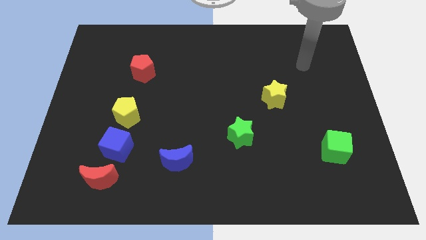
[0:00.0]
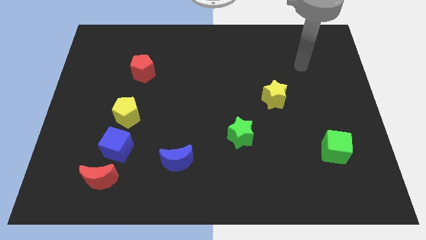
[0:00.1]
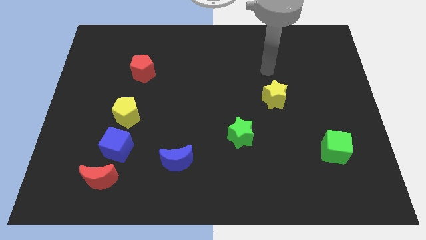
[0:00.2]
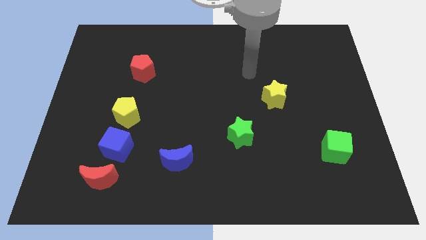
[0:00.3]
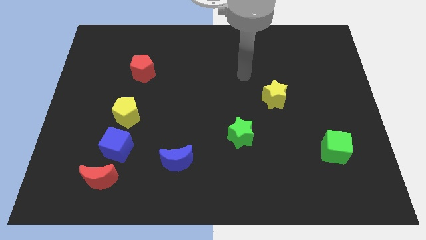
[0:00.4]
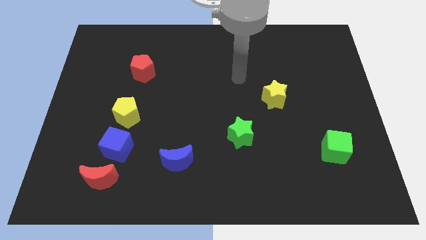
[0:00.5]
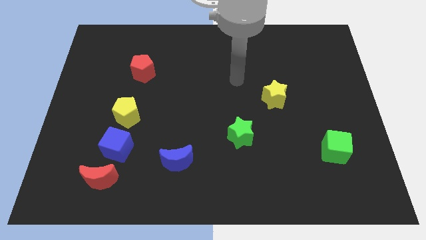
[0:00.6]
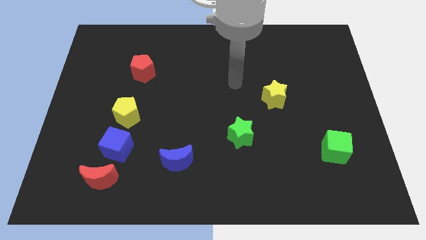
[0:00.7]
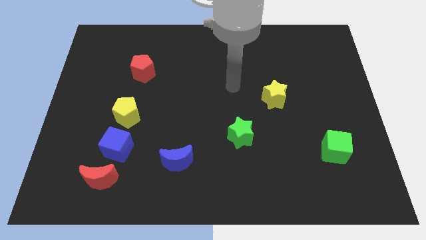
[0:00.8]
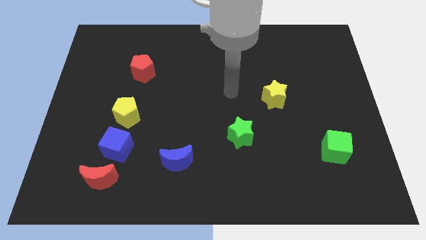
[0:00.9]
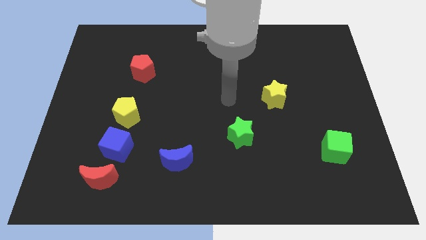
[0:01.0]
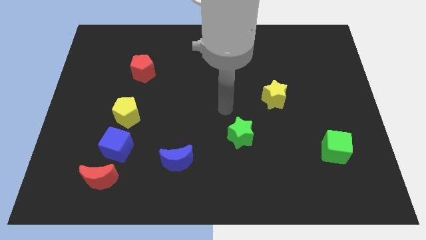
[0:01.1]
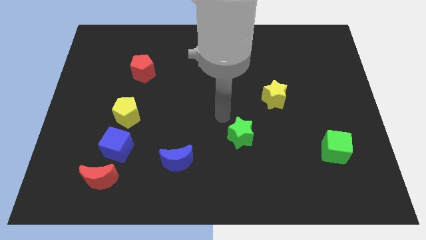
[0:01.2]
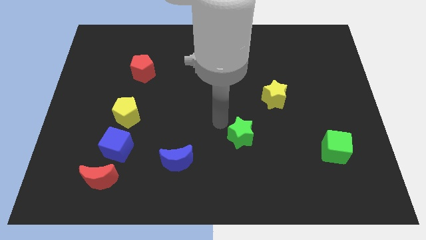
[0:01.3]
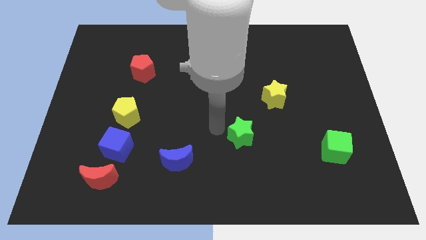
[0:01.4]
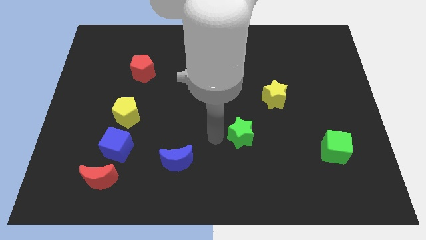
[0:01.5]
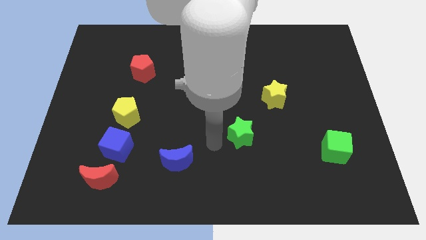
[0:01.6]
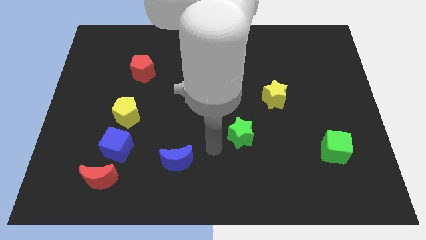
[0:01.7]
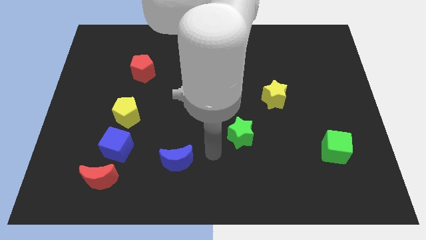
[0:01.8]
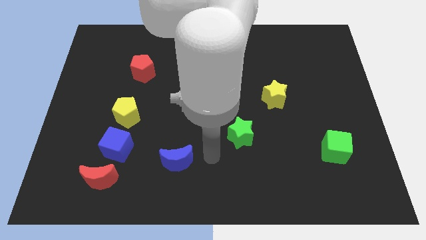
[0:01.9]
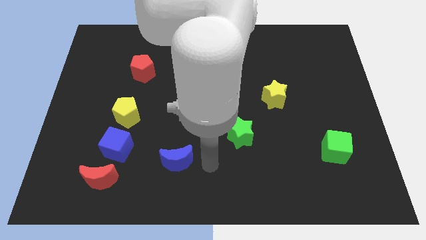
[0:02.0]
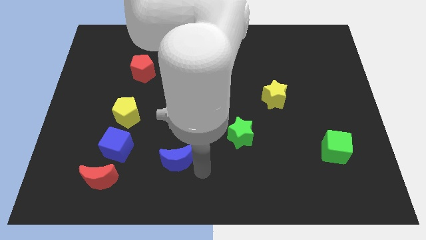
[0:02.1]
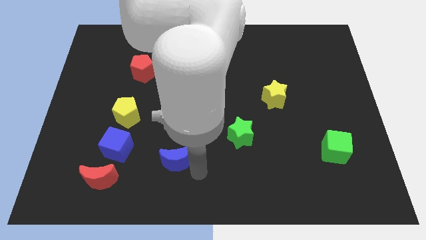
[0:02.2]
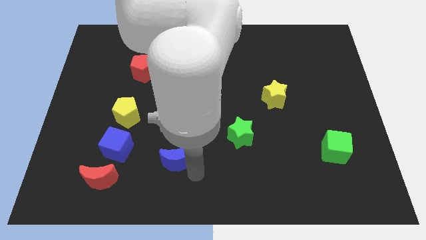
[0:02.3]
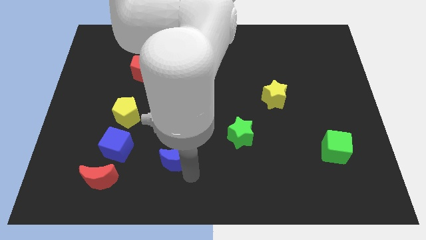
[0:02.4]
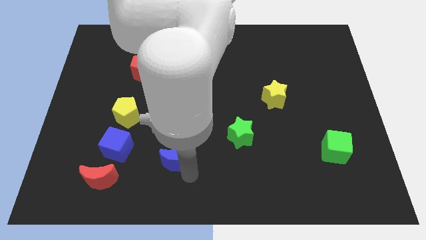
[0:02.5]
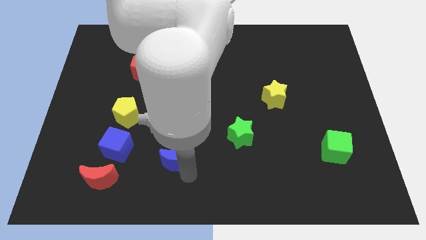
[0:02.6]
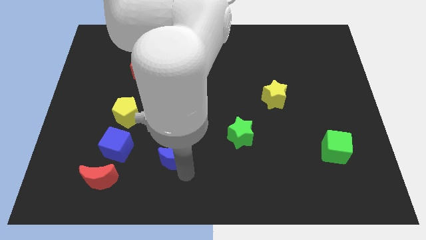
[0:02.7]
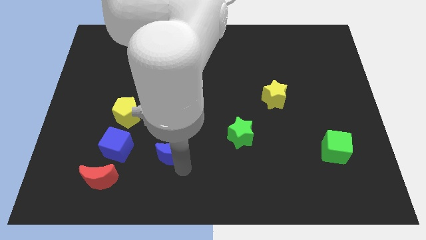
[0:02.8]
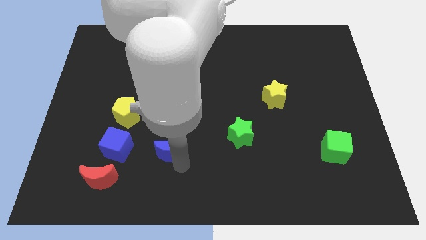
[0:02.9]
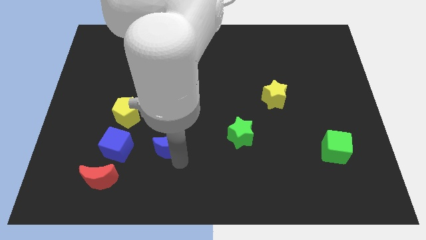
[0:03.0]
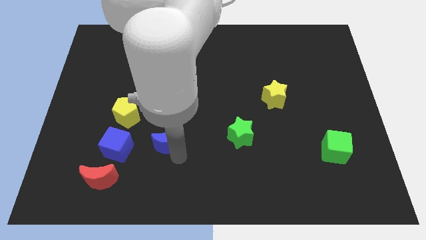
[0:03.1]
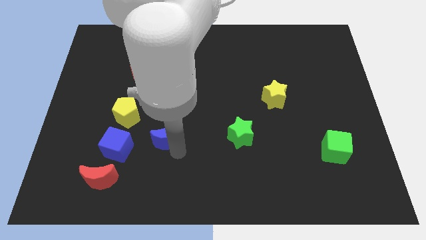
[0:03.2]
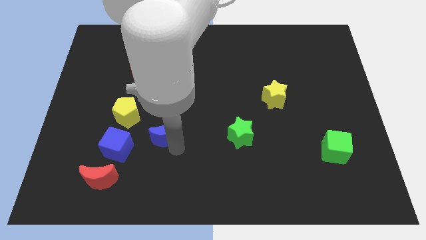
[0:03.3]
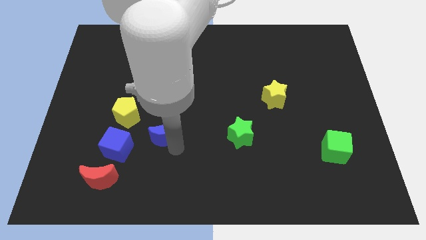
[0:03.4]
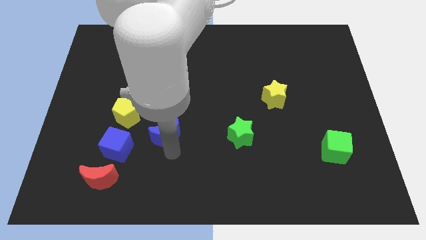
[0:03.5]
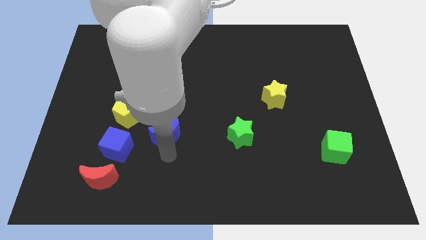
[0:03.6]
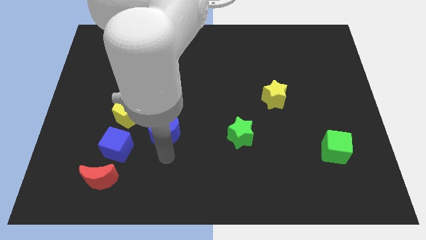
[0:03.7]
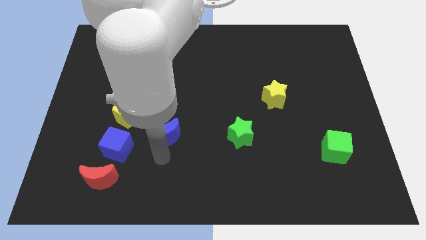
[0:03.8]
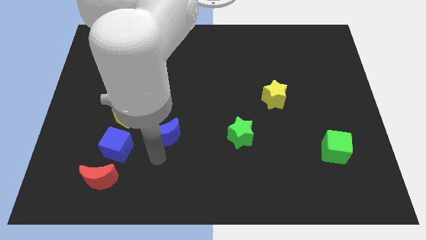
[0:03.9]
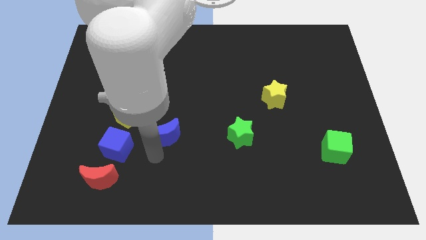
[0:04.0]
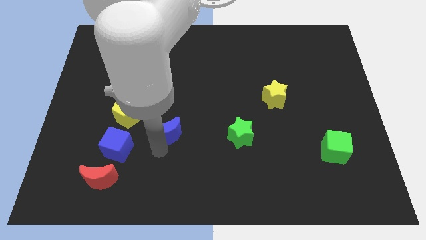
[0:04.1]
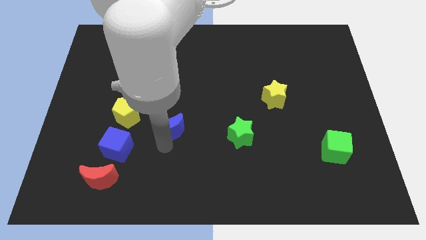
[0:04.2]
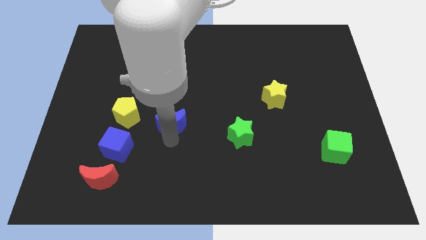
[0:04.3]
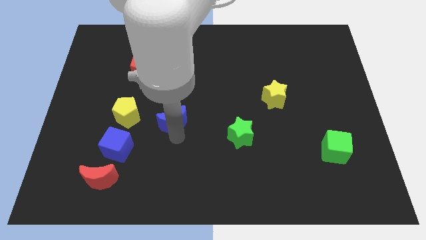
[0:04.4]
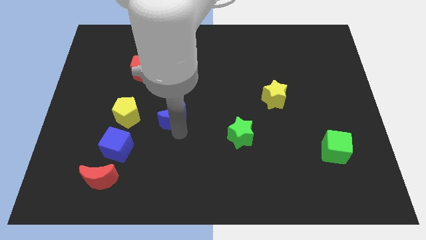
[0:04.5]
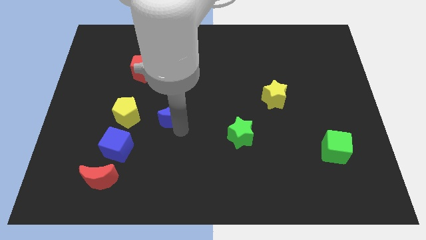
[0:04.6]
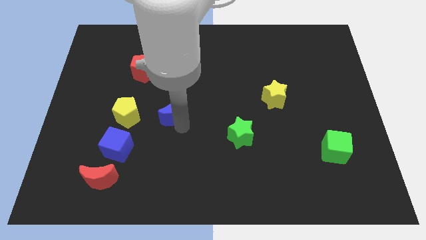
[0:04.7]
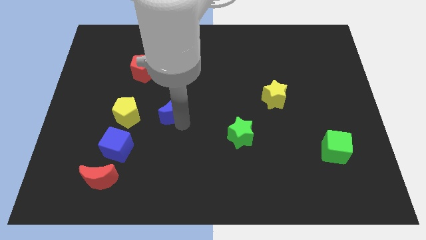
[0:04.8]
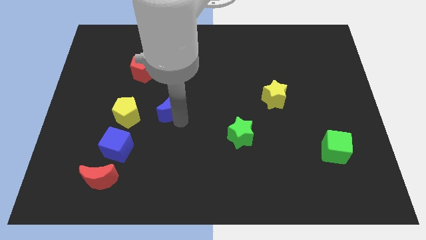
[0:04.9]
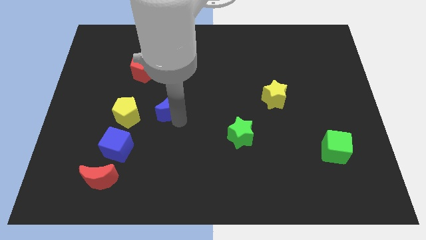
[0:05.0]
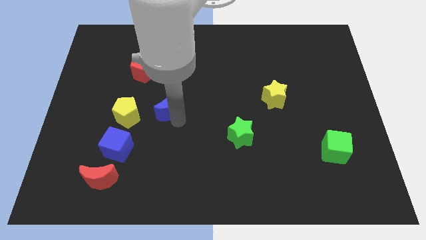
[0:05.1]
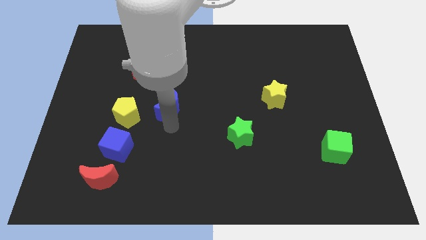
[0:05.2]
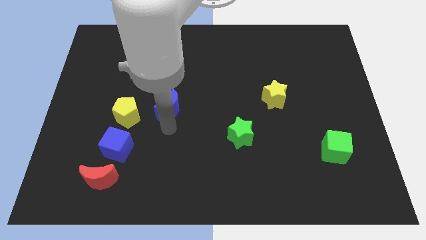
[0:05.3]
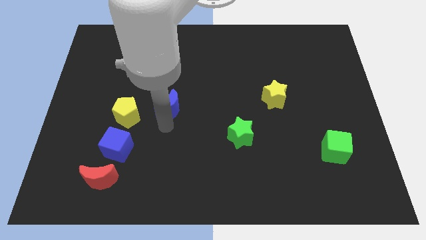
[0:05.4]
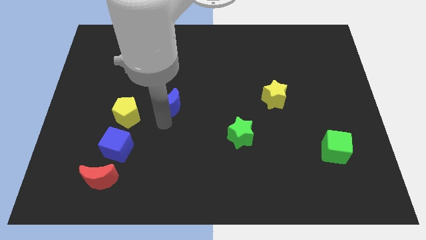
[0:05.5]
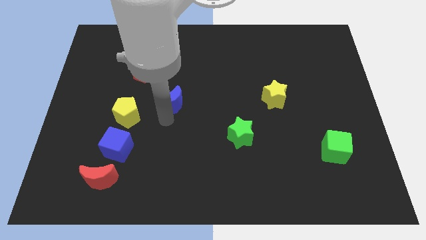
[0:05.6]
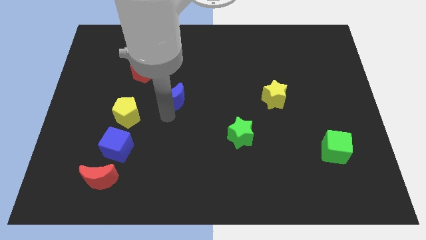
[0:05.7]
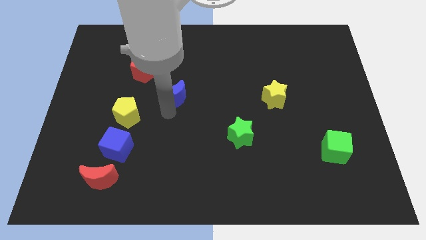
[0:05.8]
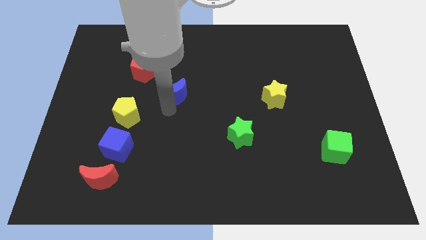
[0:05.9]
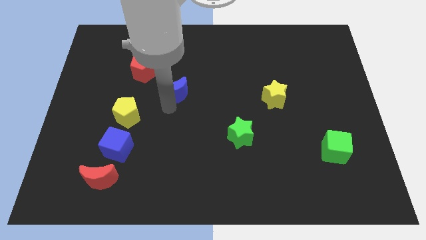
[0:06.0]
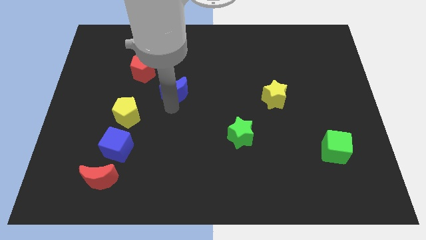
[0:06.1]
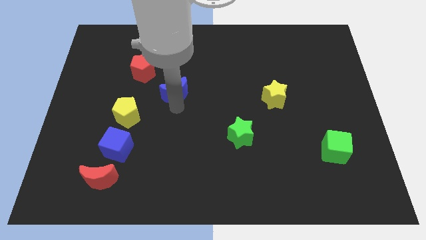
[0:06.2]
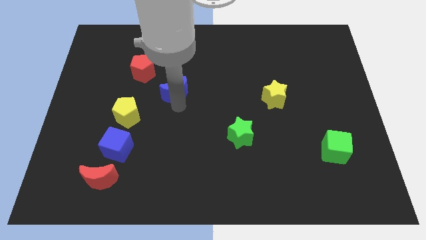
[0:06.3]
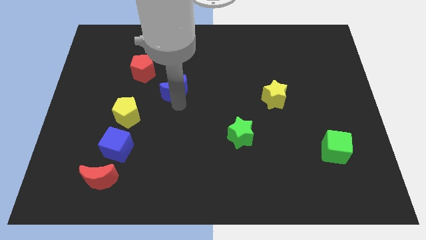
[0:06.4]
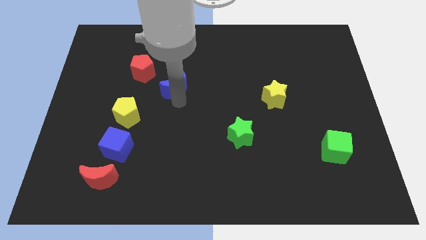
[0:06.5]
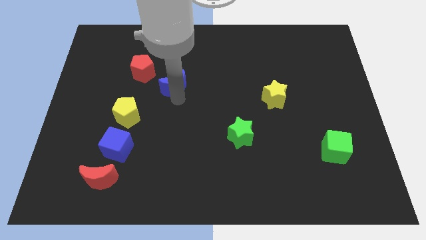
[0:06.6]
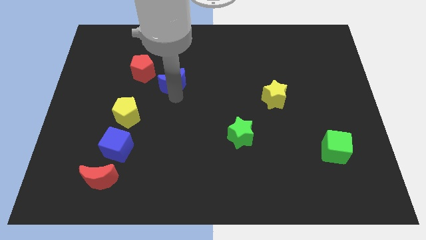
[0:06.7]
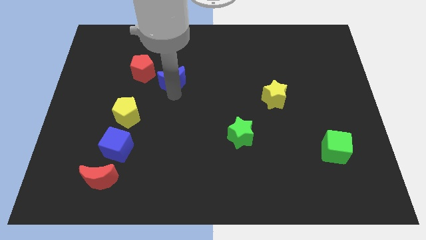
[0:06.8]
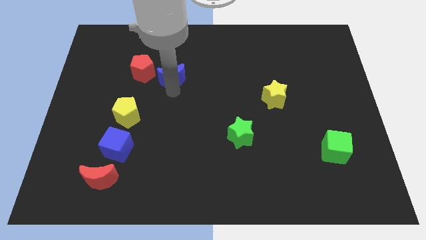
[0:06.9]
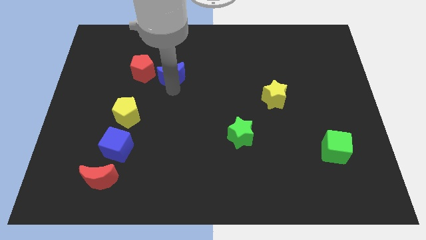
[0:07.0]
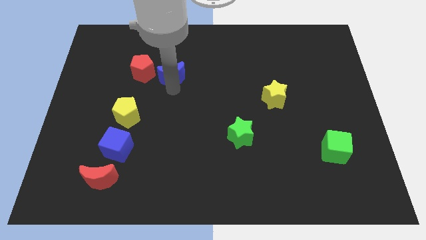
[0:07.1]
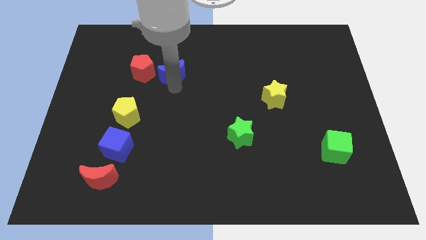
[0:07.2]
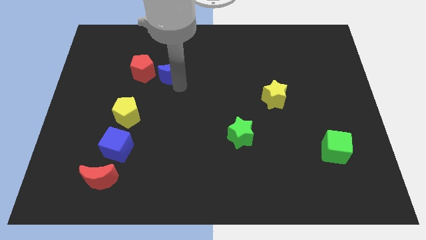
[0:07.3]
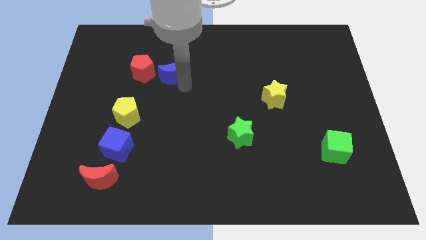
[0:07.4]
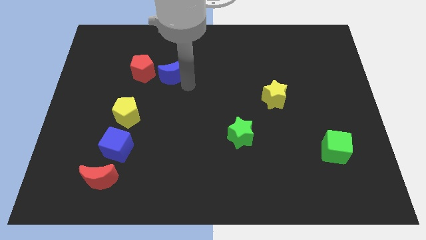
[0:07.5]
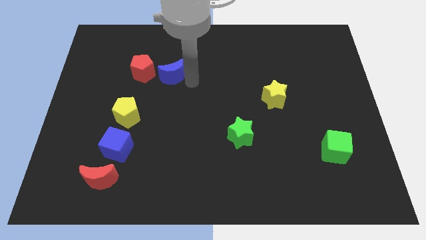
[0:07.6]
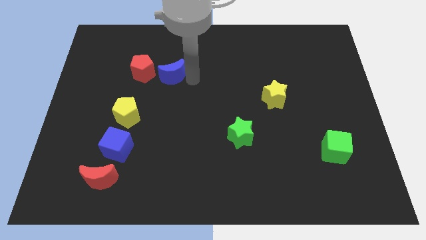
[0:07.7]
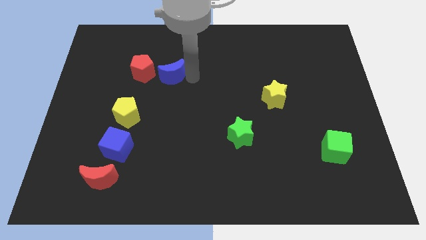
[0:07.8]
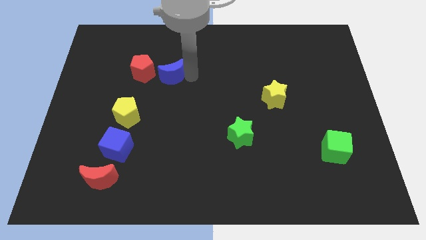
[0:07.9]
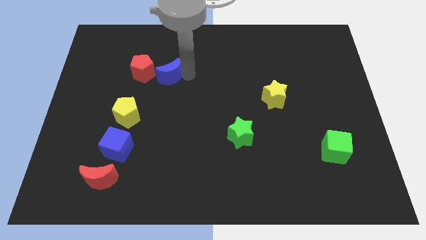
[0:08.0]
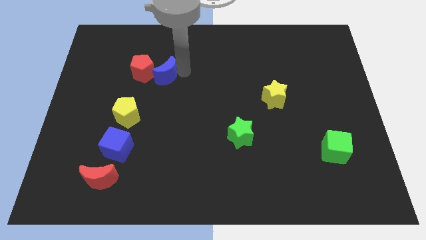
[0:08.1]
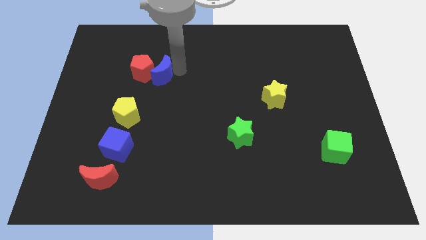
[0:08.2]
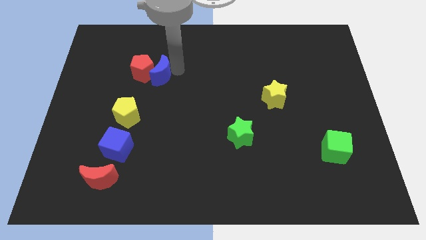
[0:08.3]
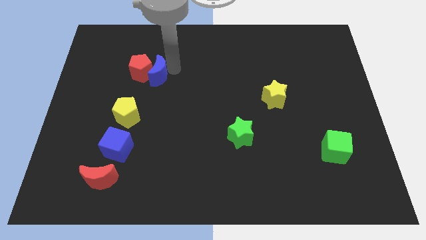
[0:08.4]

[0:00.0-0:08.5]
push the blue moon towards the red pentagon

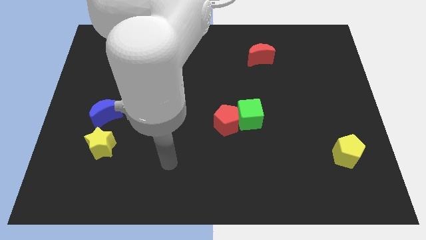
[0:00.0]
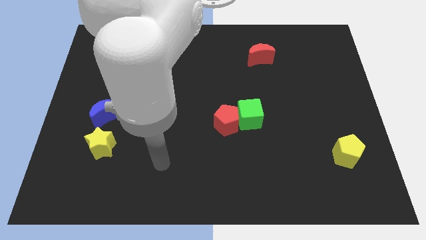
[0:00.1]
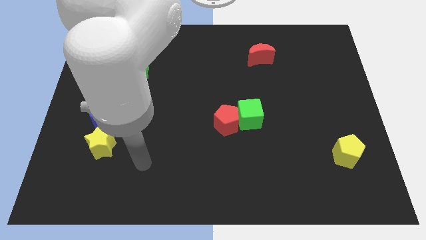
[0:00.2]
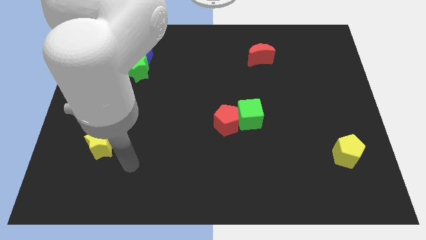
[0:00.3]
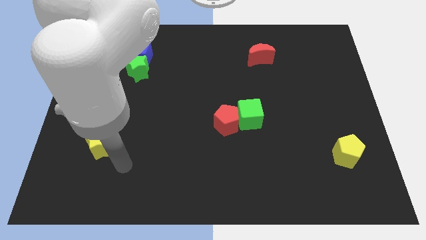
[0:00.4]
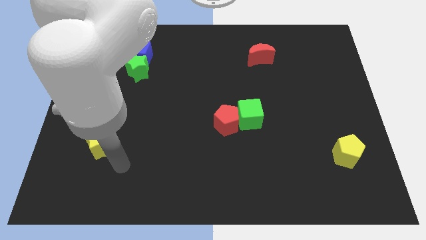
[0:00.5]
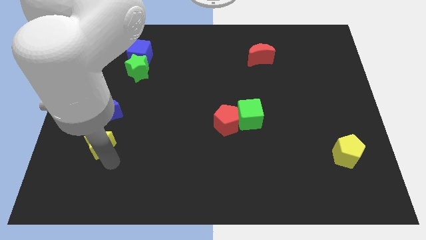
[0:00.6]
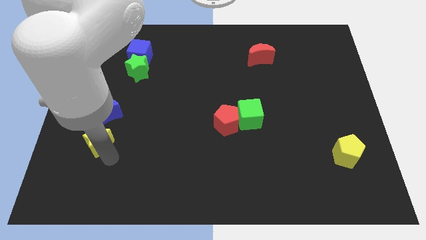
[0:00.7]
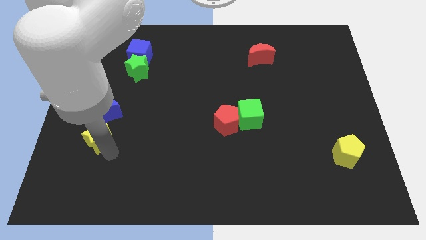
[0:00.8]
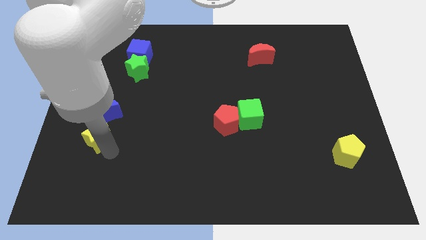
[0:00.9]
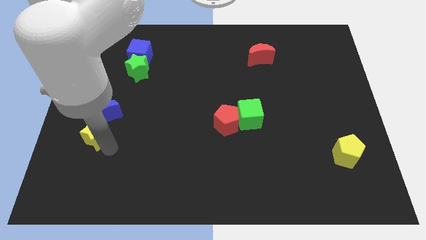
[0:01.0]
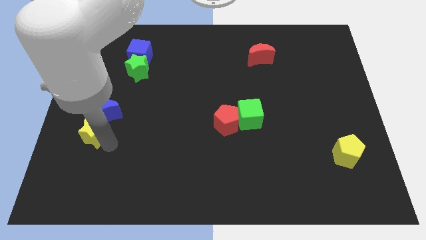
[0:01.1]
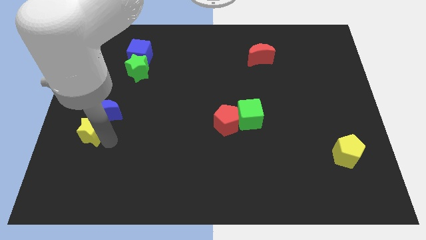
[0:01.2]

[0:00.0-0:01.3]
push the yellow star next to the blue moon
